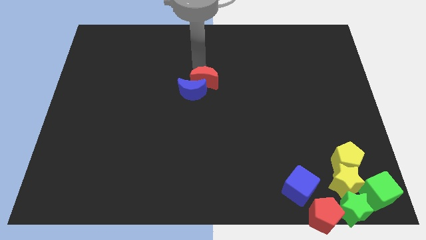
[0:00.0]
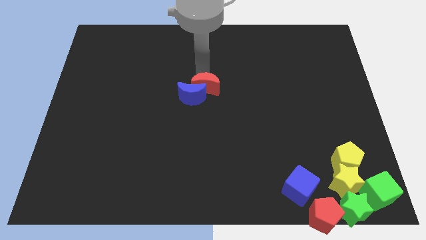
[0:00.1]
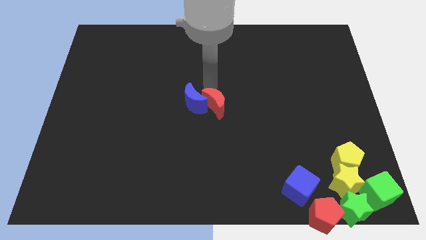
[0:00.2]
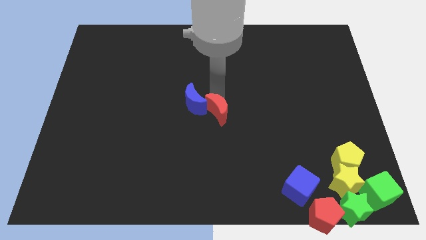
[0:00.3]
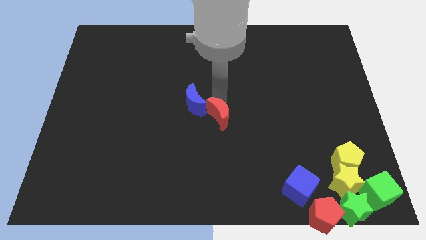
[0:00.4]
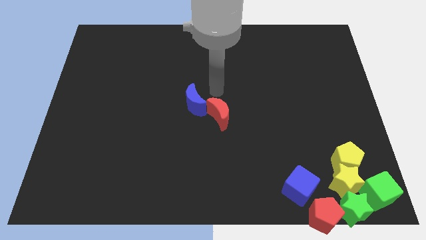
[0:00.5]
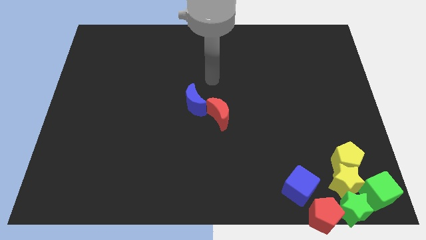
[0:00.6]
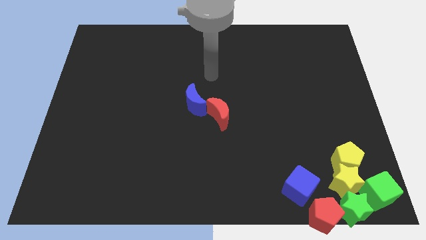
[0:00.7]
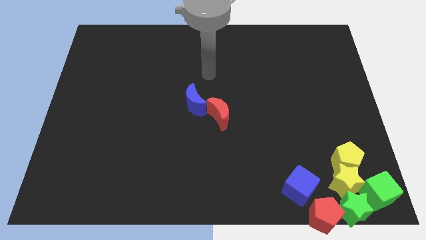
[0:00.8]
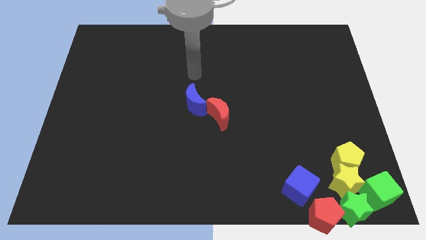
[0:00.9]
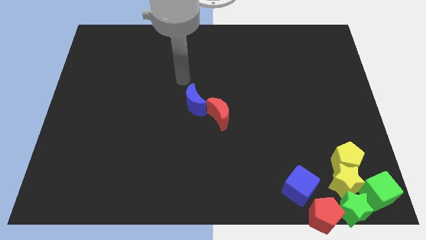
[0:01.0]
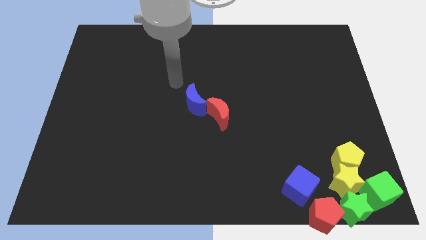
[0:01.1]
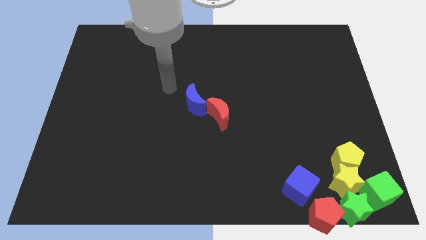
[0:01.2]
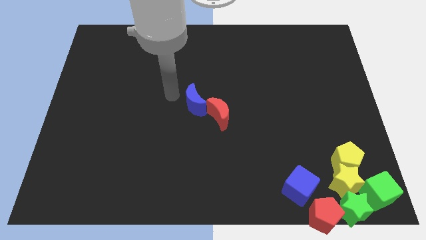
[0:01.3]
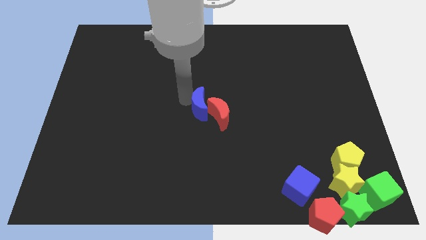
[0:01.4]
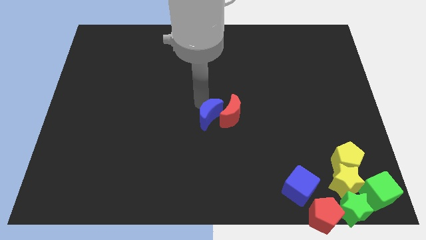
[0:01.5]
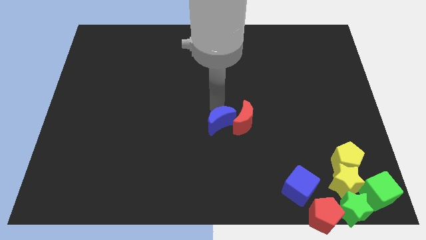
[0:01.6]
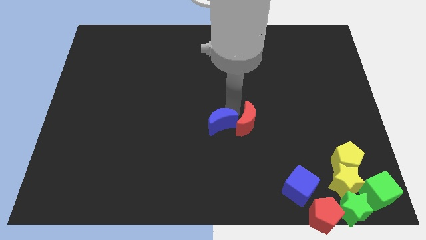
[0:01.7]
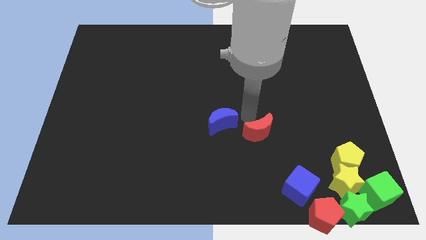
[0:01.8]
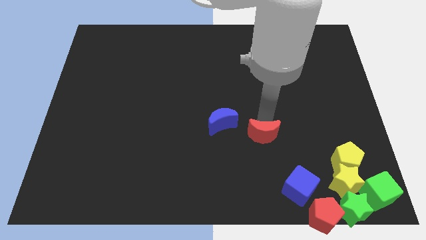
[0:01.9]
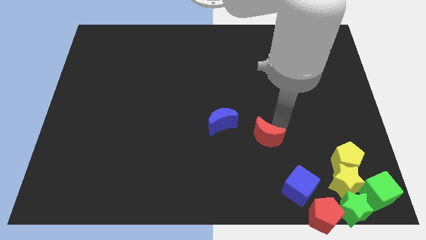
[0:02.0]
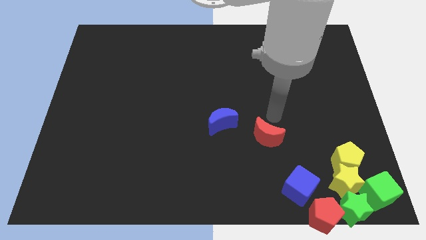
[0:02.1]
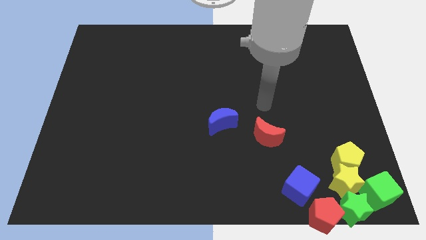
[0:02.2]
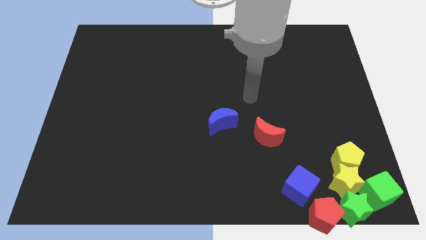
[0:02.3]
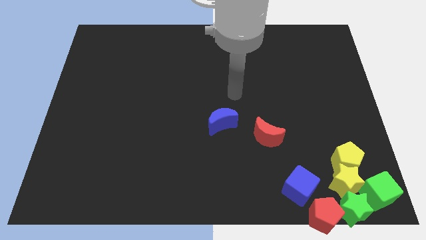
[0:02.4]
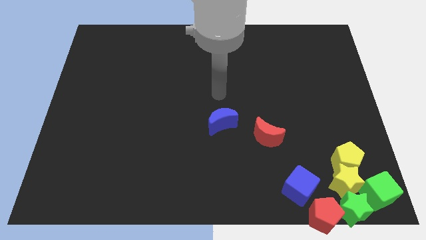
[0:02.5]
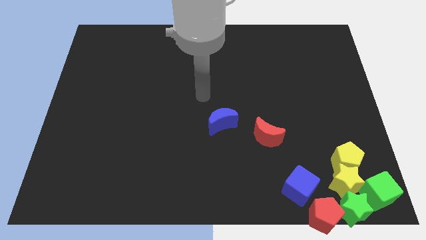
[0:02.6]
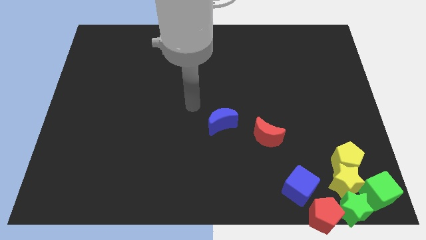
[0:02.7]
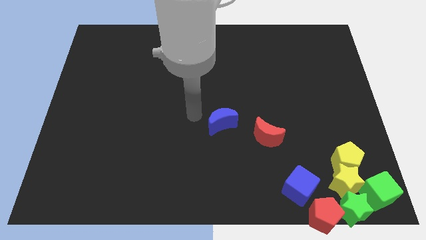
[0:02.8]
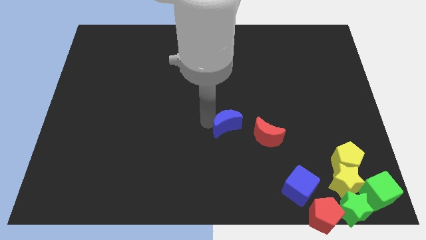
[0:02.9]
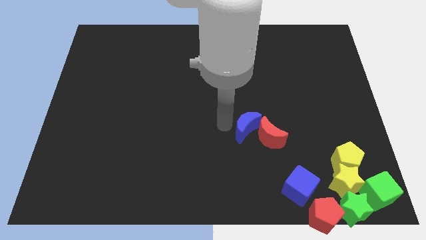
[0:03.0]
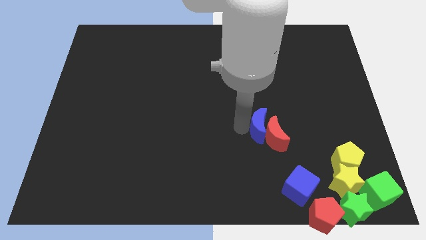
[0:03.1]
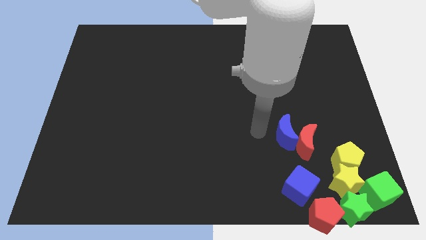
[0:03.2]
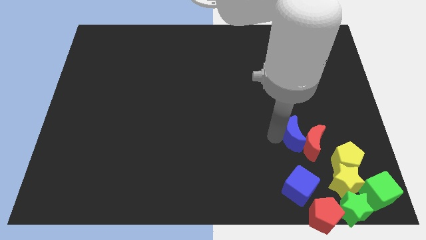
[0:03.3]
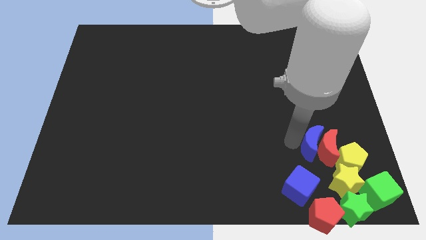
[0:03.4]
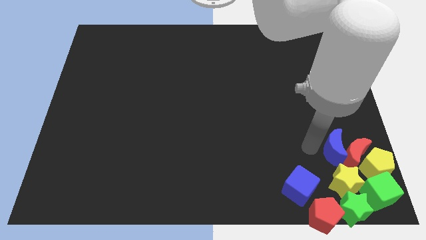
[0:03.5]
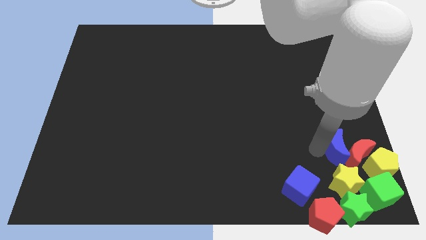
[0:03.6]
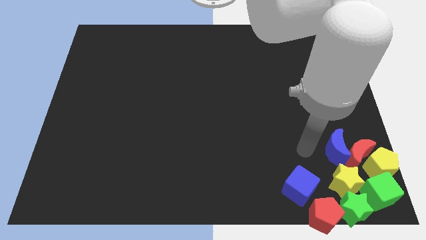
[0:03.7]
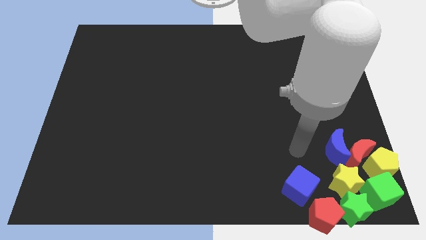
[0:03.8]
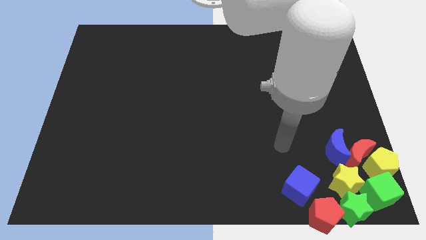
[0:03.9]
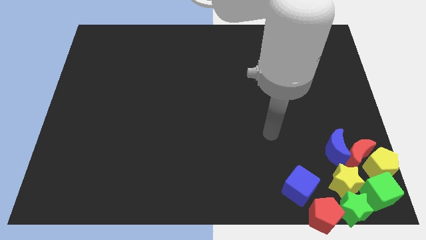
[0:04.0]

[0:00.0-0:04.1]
move red and blue crescent close to the group of blocks

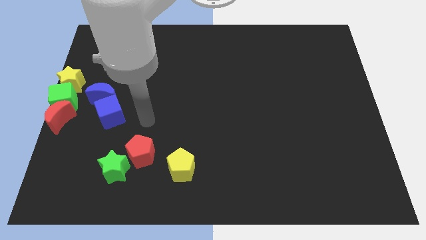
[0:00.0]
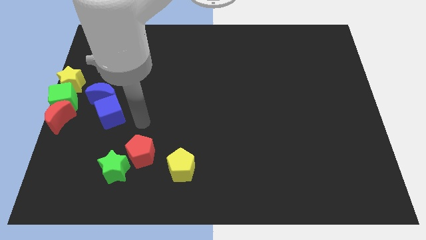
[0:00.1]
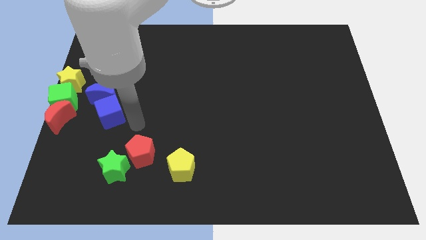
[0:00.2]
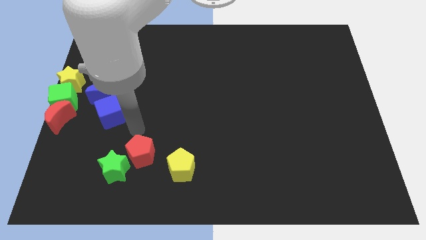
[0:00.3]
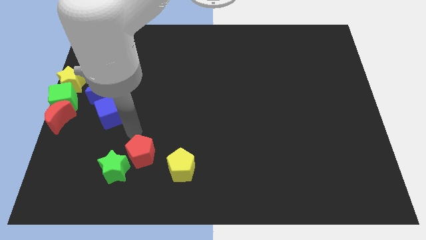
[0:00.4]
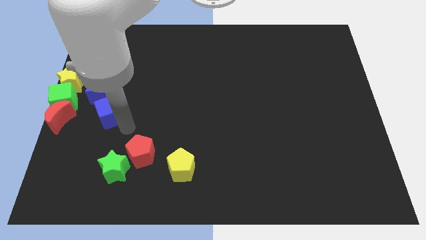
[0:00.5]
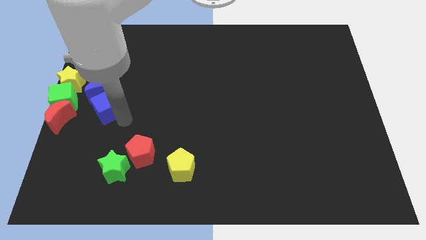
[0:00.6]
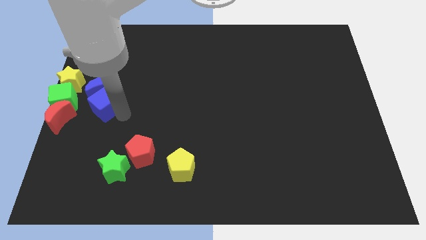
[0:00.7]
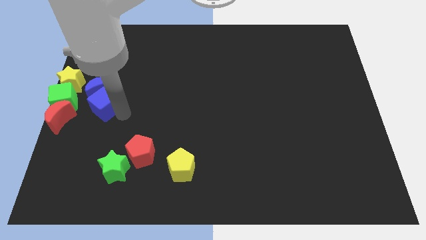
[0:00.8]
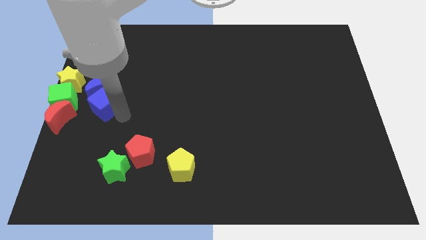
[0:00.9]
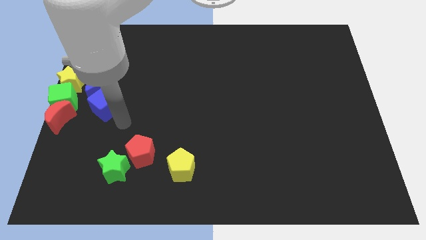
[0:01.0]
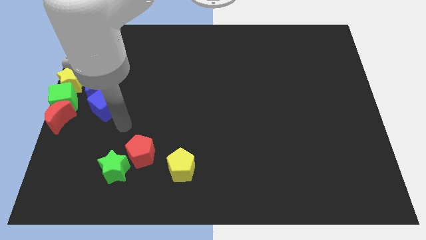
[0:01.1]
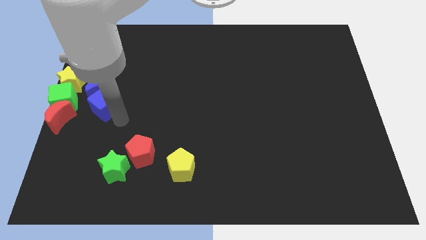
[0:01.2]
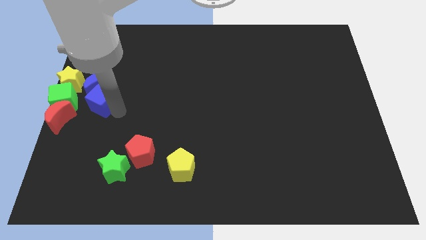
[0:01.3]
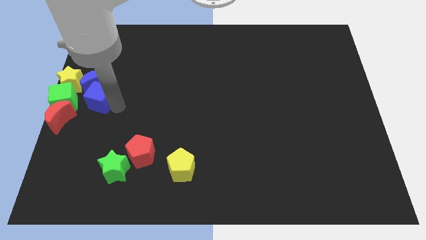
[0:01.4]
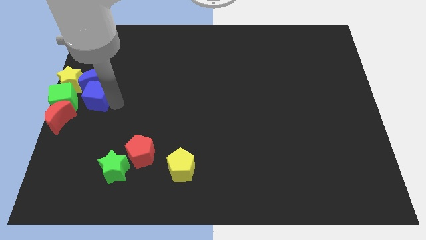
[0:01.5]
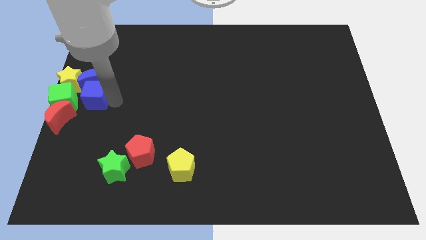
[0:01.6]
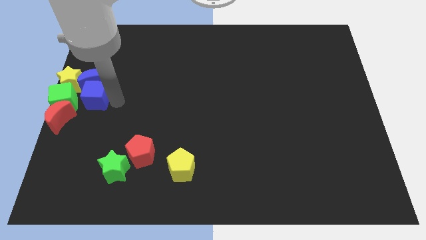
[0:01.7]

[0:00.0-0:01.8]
push the blue cube into the blue moon

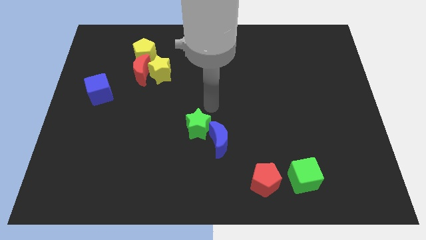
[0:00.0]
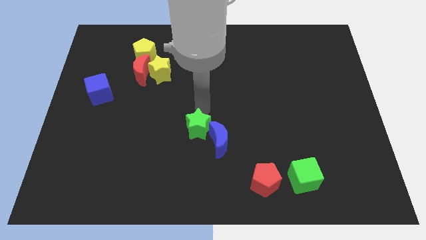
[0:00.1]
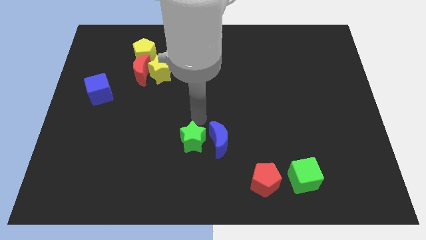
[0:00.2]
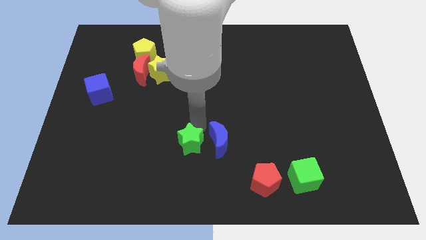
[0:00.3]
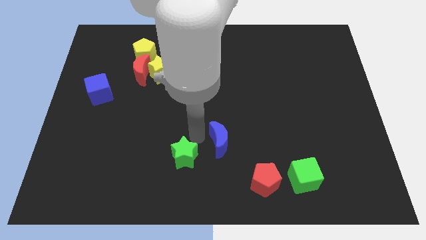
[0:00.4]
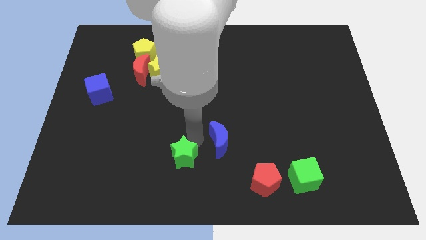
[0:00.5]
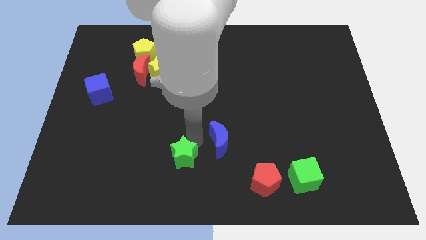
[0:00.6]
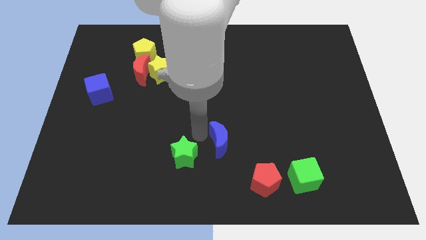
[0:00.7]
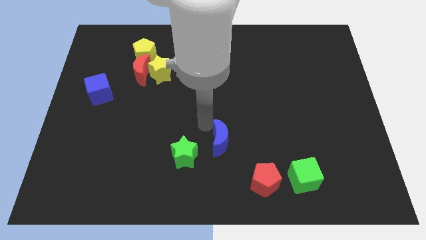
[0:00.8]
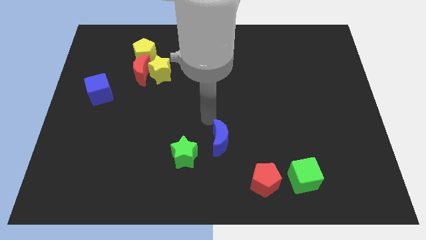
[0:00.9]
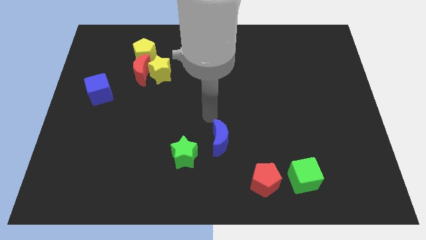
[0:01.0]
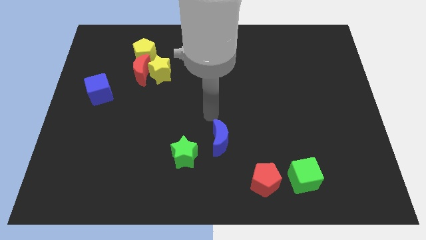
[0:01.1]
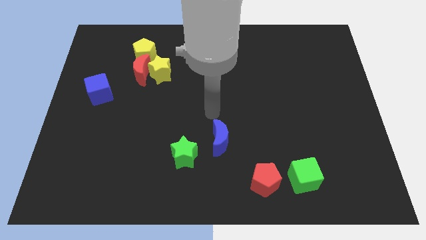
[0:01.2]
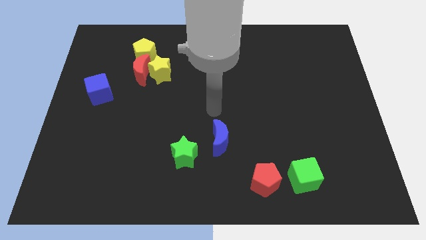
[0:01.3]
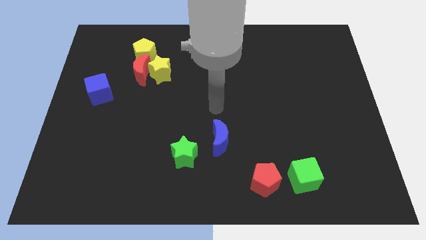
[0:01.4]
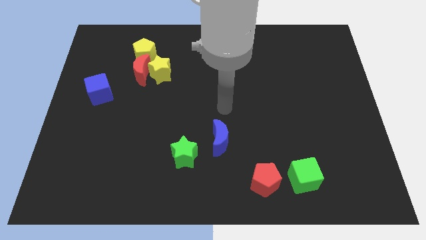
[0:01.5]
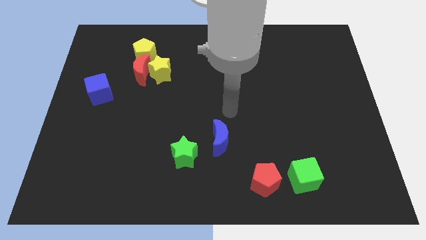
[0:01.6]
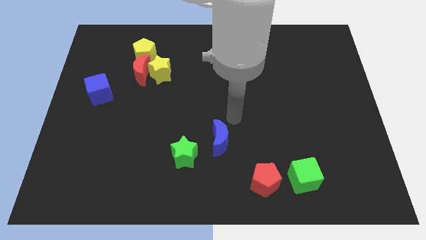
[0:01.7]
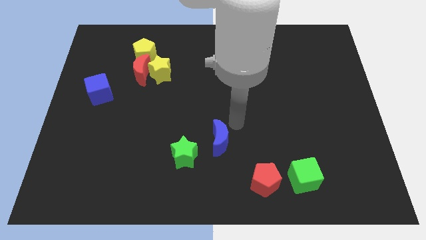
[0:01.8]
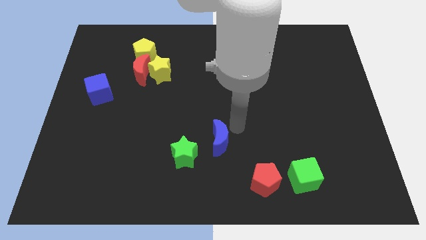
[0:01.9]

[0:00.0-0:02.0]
separate the green star and blue moon

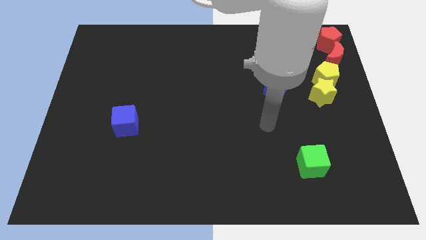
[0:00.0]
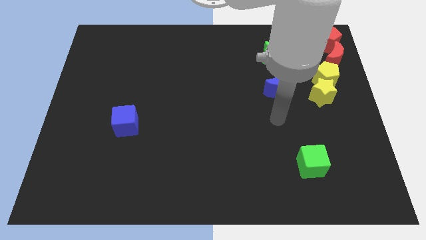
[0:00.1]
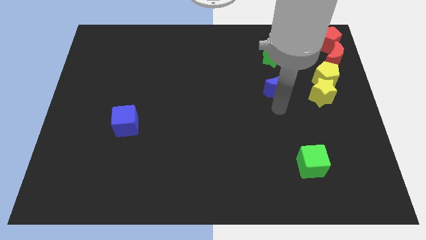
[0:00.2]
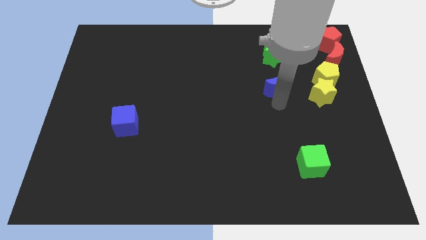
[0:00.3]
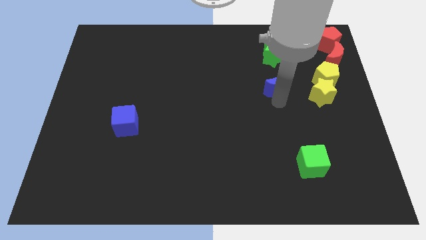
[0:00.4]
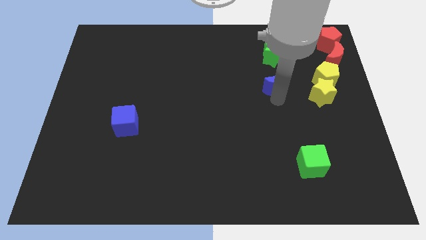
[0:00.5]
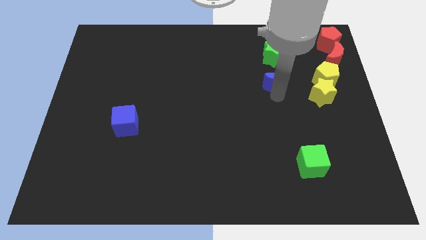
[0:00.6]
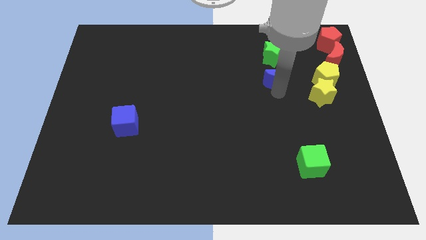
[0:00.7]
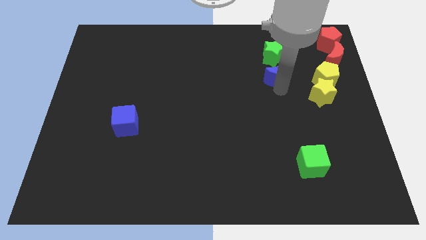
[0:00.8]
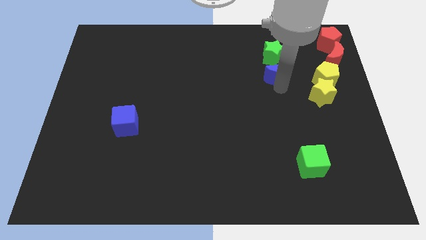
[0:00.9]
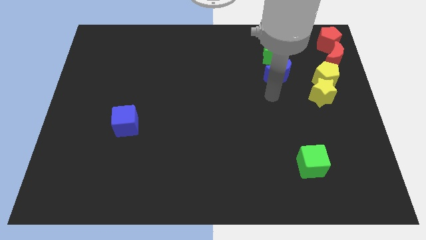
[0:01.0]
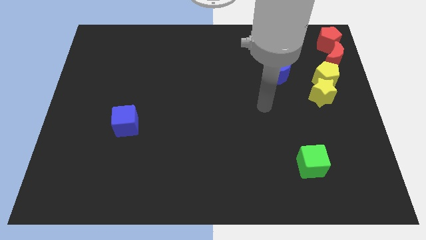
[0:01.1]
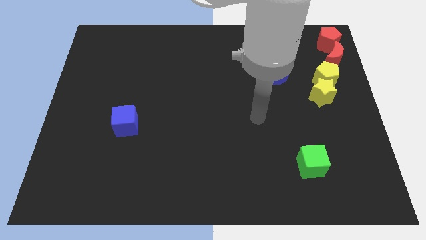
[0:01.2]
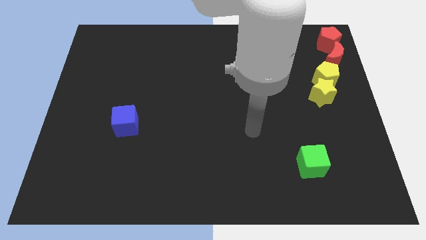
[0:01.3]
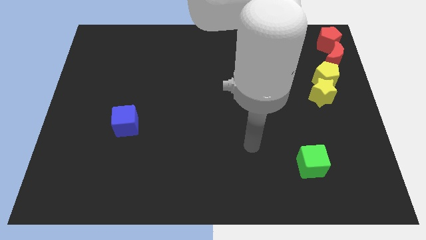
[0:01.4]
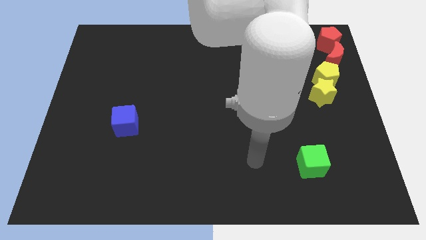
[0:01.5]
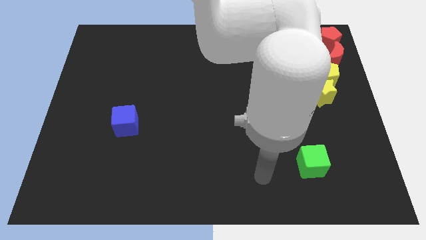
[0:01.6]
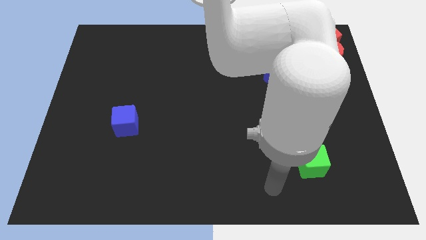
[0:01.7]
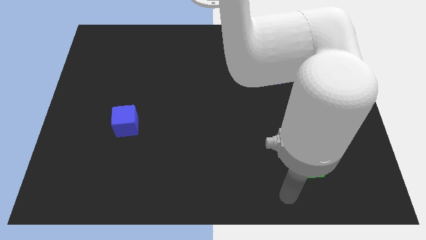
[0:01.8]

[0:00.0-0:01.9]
push the blue moon close to the green star
